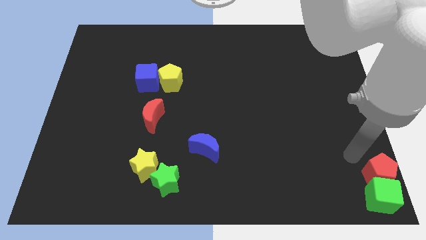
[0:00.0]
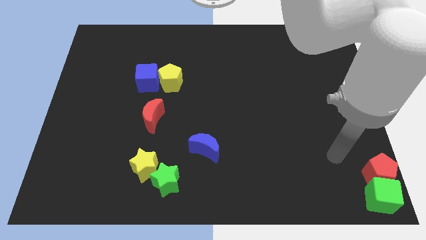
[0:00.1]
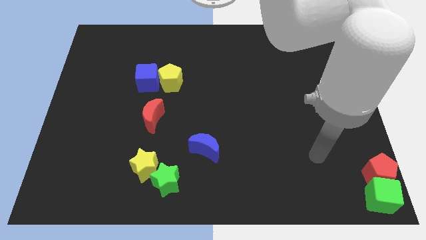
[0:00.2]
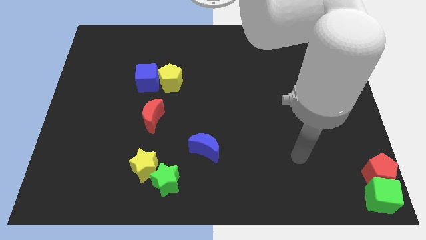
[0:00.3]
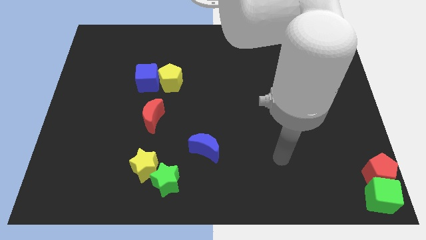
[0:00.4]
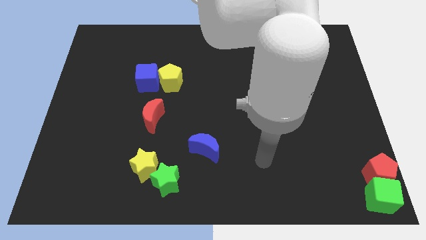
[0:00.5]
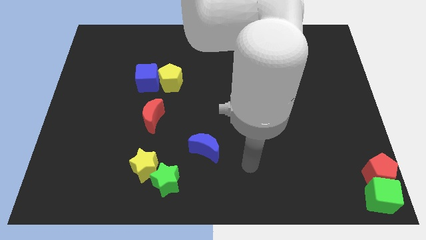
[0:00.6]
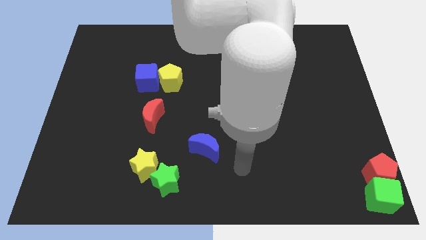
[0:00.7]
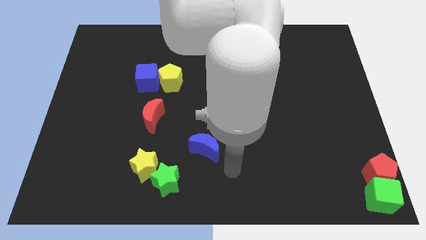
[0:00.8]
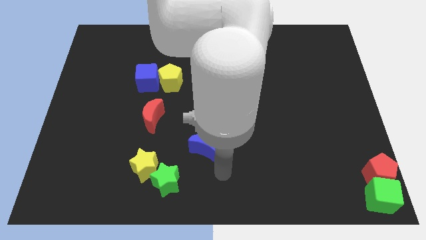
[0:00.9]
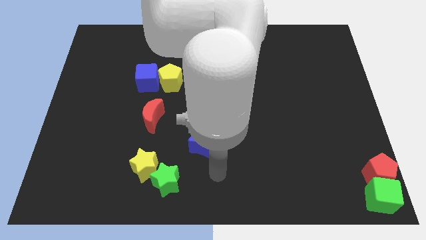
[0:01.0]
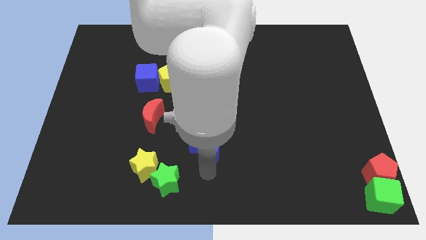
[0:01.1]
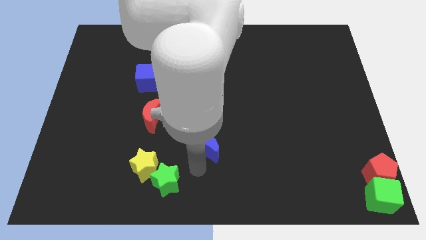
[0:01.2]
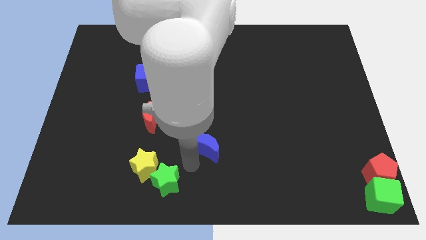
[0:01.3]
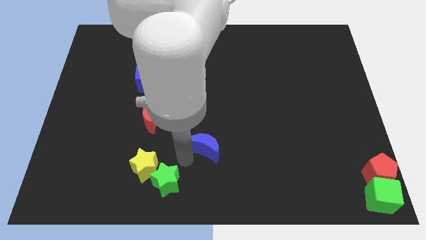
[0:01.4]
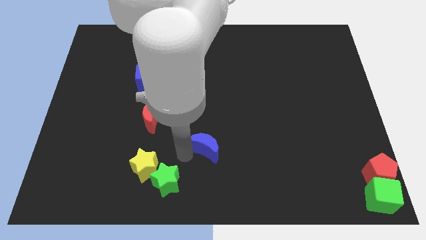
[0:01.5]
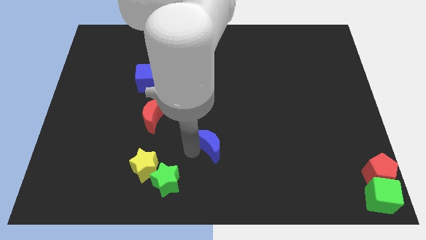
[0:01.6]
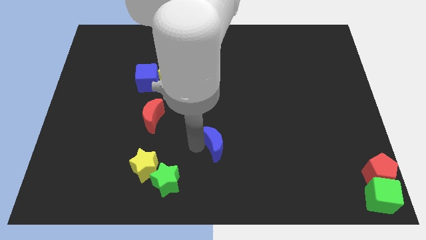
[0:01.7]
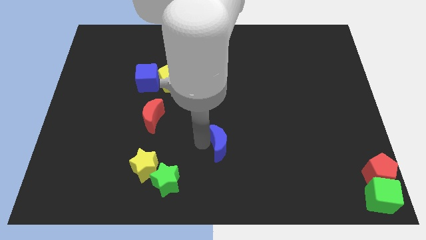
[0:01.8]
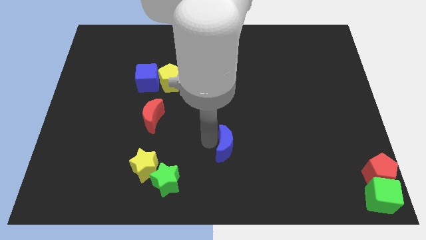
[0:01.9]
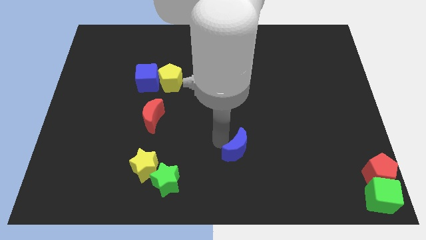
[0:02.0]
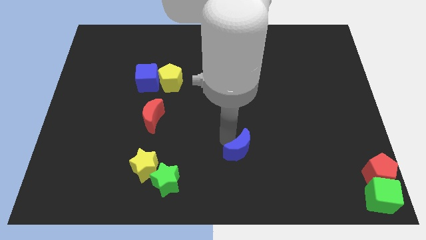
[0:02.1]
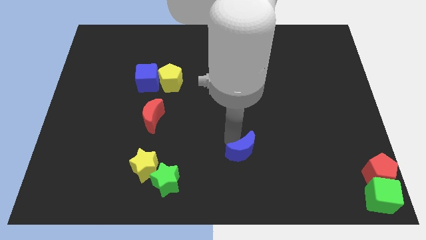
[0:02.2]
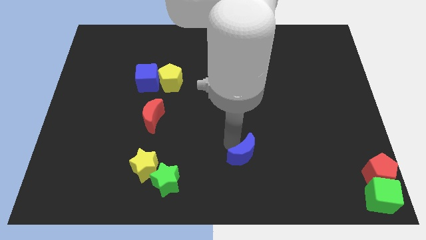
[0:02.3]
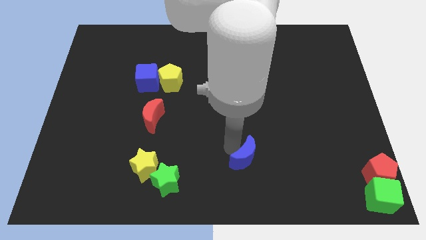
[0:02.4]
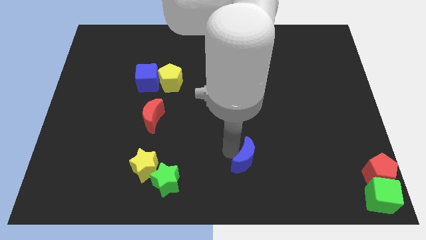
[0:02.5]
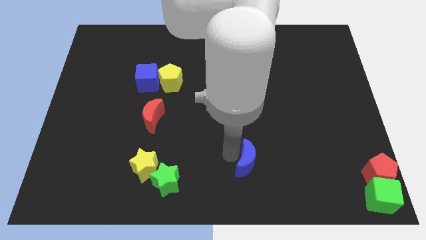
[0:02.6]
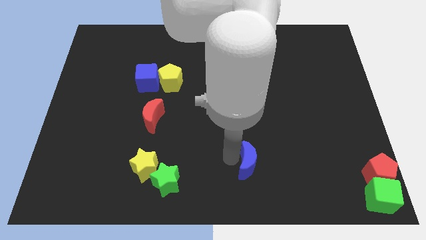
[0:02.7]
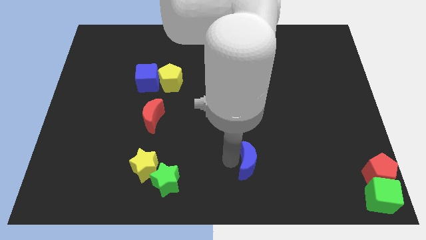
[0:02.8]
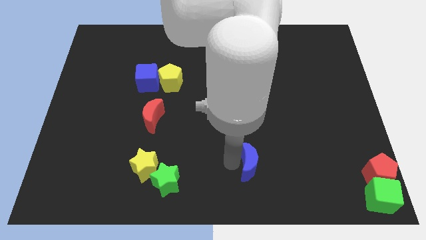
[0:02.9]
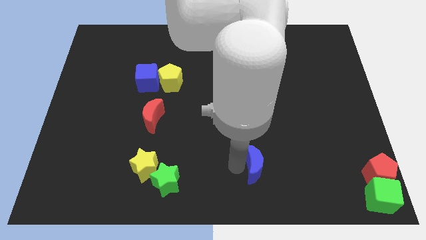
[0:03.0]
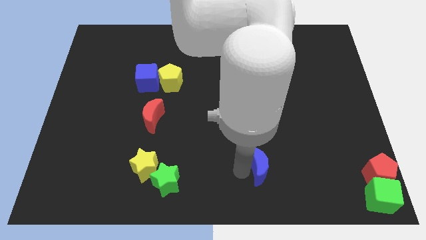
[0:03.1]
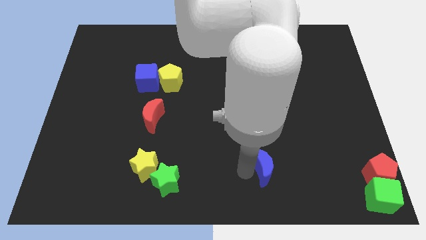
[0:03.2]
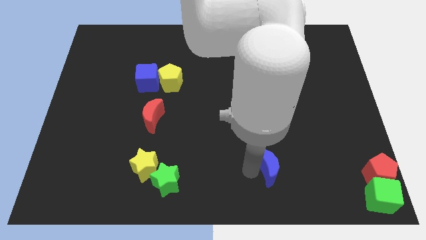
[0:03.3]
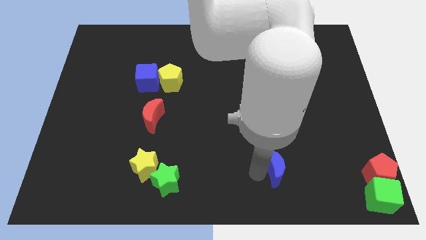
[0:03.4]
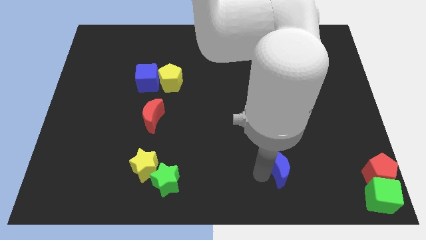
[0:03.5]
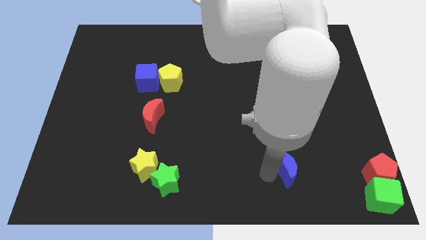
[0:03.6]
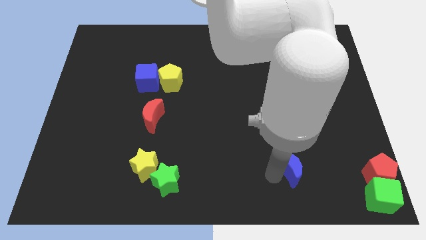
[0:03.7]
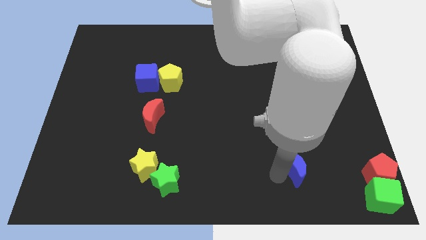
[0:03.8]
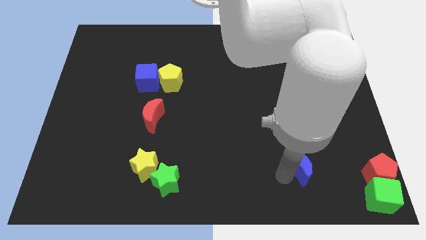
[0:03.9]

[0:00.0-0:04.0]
move blue crescent towards the right of red pentagon

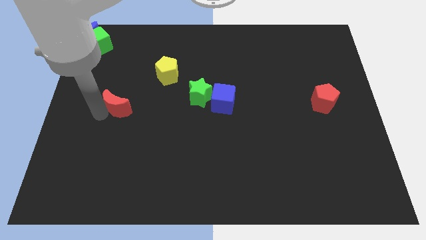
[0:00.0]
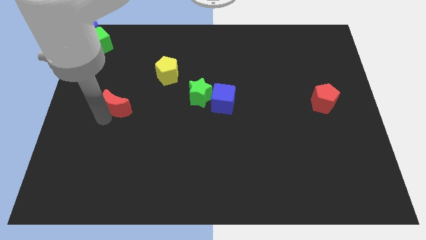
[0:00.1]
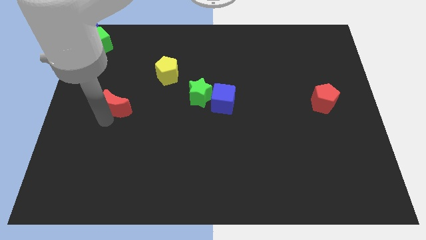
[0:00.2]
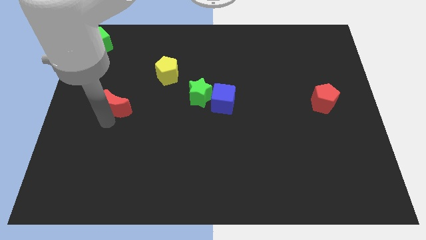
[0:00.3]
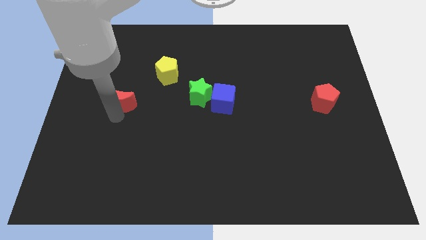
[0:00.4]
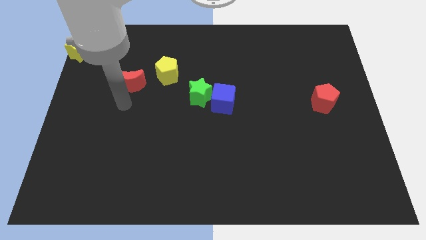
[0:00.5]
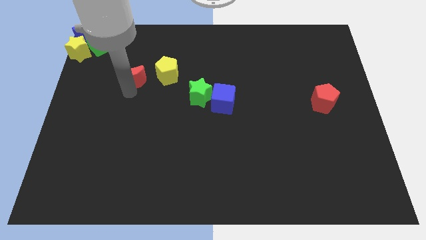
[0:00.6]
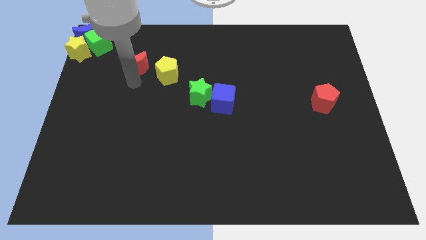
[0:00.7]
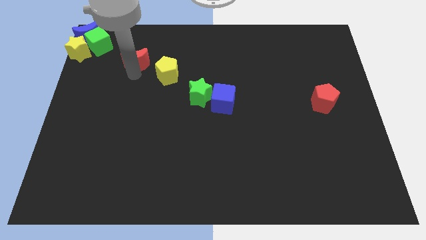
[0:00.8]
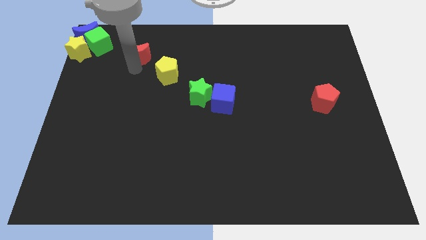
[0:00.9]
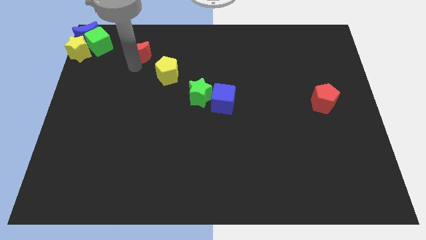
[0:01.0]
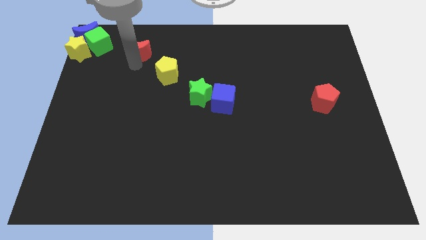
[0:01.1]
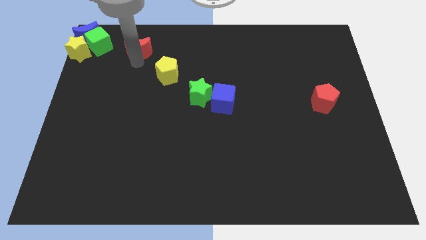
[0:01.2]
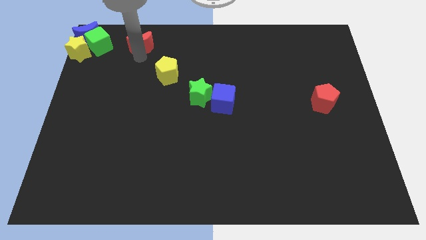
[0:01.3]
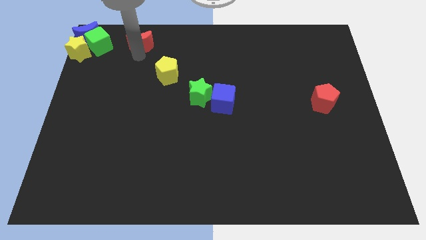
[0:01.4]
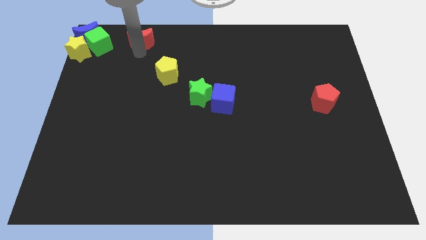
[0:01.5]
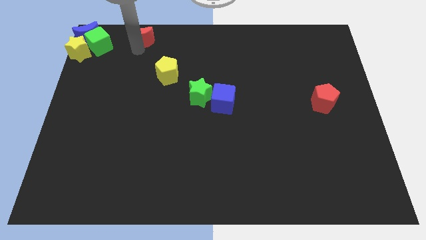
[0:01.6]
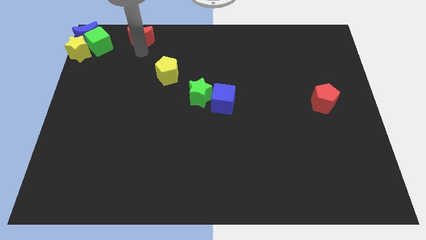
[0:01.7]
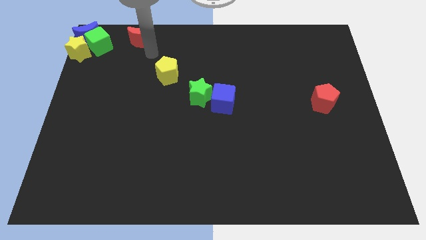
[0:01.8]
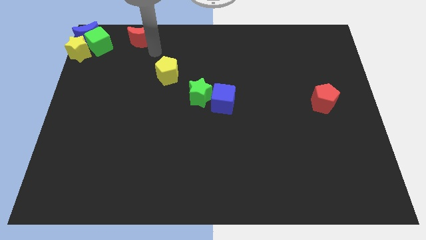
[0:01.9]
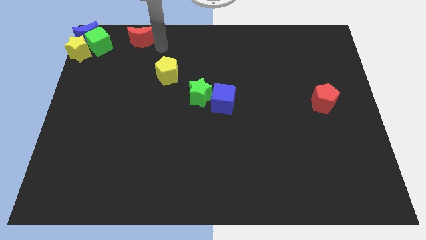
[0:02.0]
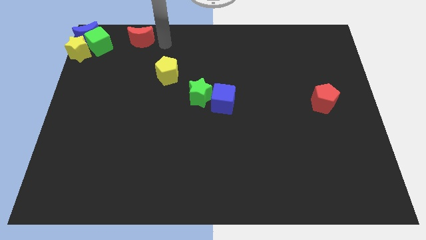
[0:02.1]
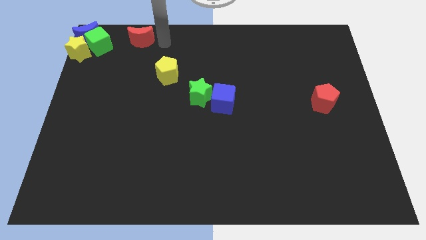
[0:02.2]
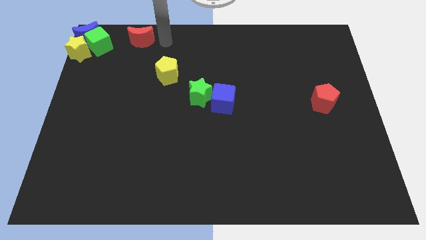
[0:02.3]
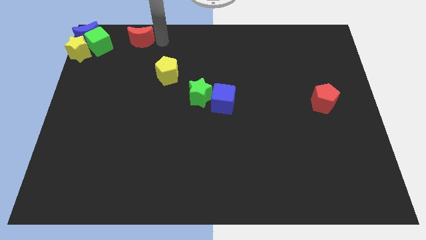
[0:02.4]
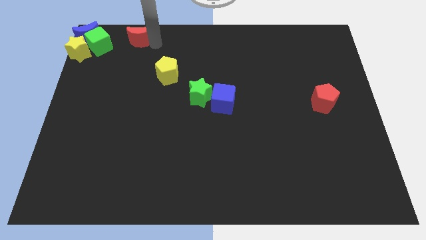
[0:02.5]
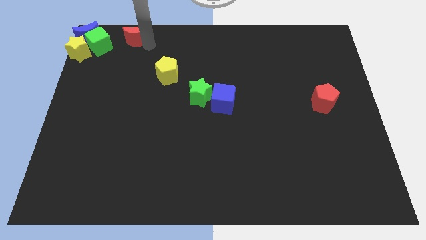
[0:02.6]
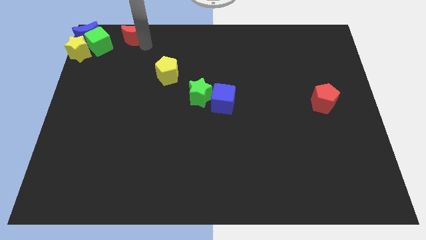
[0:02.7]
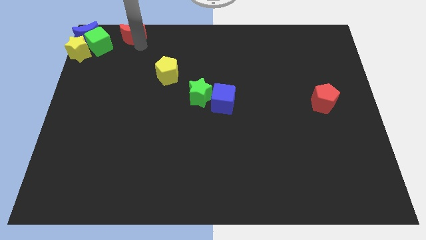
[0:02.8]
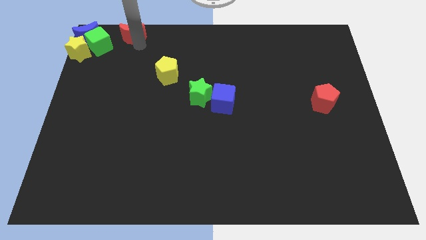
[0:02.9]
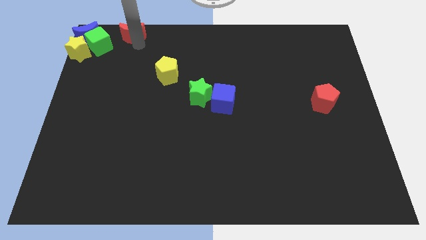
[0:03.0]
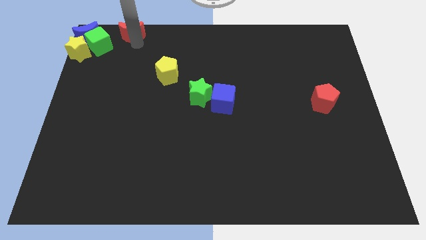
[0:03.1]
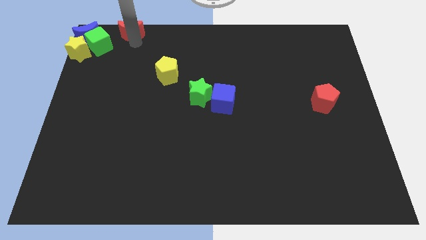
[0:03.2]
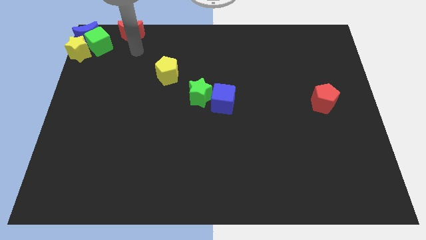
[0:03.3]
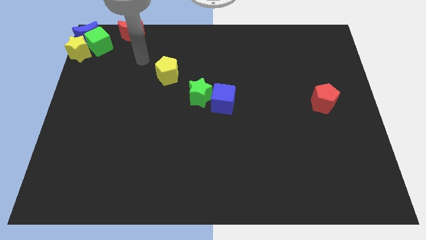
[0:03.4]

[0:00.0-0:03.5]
move the red crescent top right to the green cube

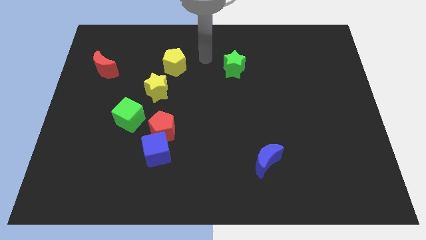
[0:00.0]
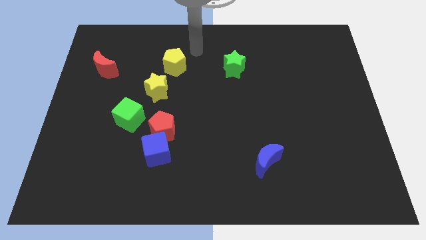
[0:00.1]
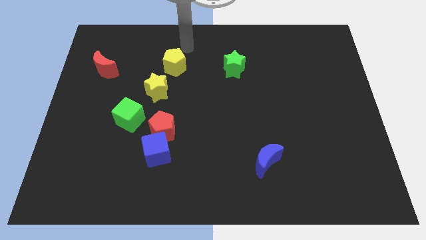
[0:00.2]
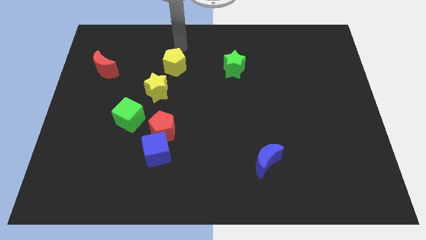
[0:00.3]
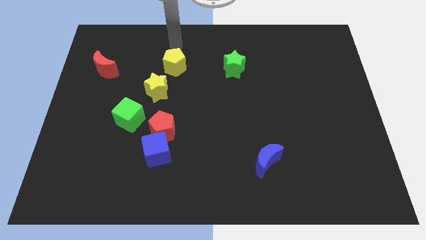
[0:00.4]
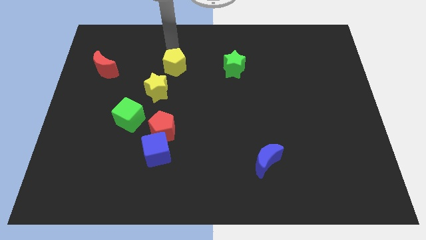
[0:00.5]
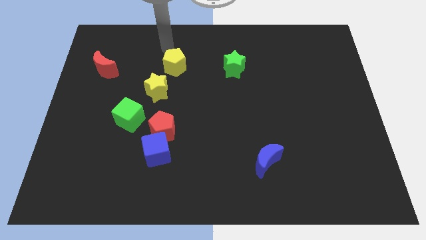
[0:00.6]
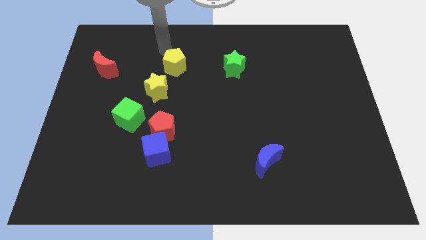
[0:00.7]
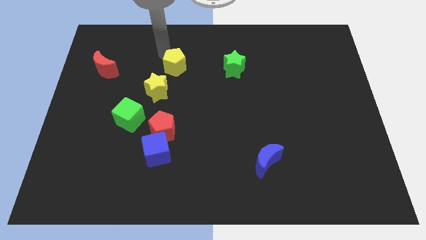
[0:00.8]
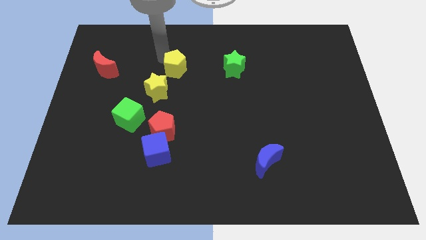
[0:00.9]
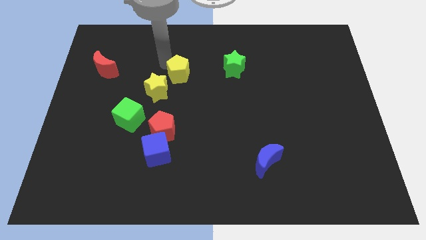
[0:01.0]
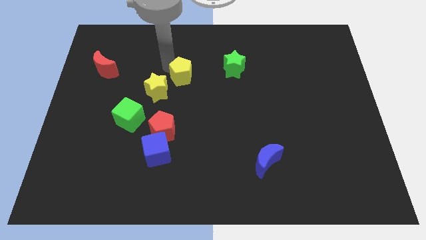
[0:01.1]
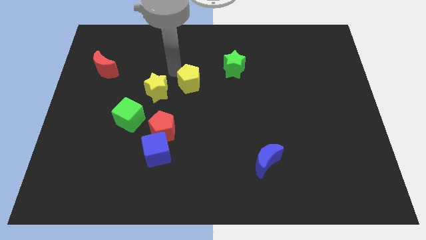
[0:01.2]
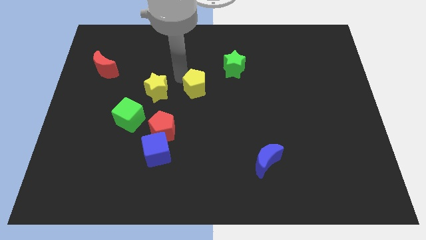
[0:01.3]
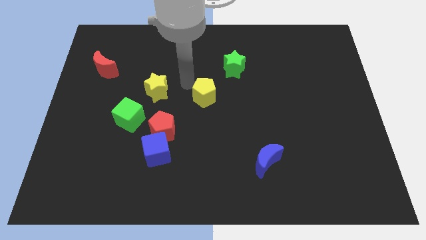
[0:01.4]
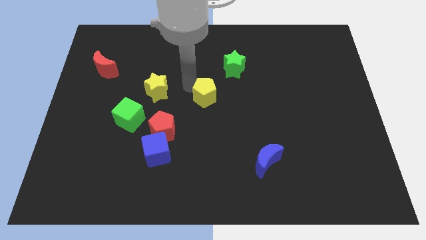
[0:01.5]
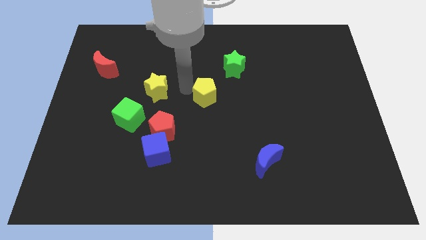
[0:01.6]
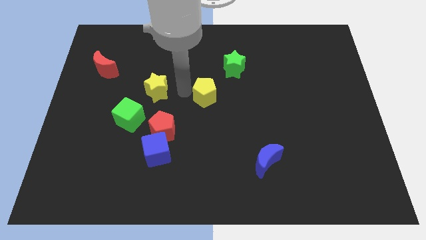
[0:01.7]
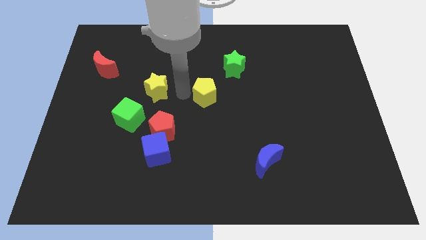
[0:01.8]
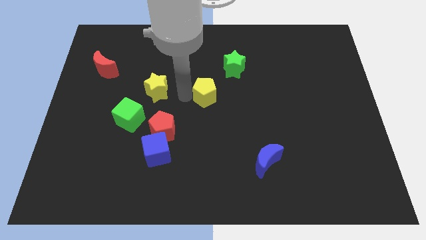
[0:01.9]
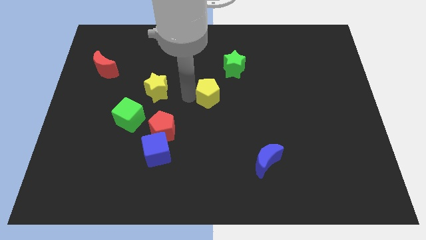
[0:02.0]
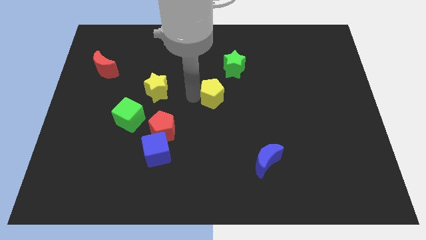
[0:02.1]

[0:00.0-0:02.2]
move yellow pentagon to the right of yellow star
